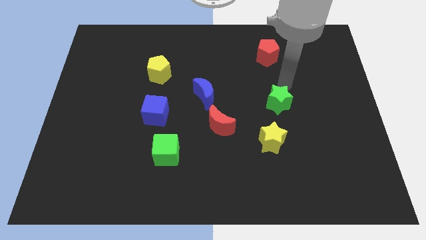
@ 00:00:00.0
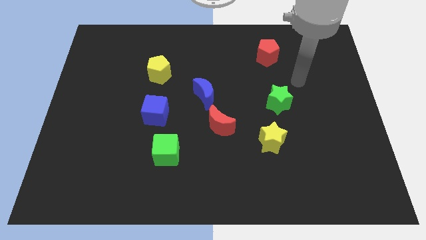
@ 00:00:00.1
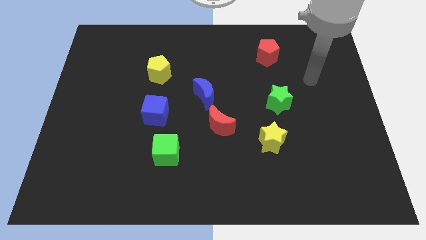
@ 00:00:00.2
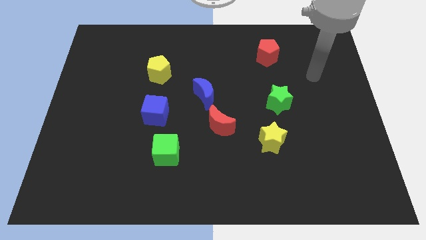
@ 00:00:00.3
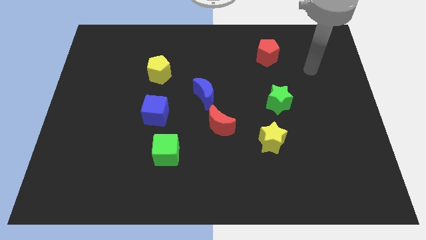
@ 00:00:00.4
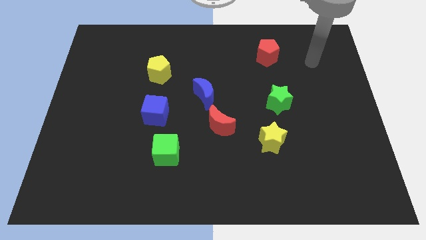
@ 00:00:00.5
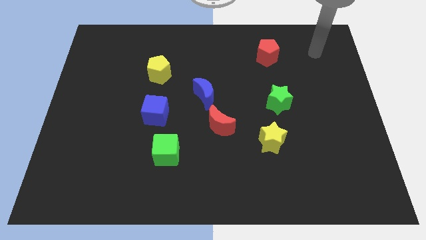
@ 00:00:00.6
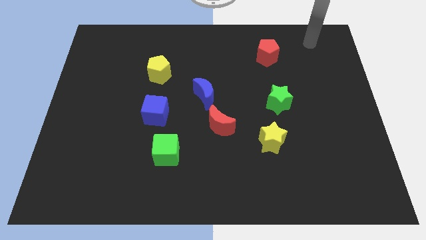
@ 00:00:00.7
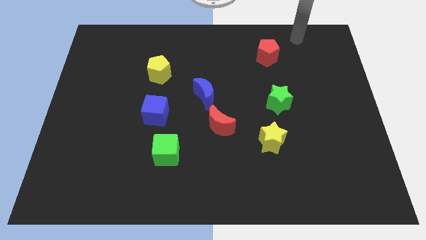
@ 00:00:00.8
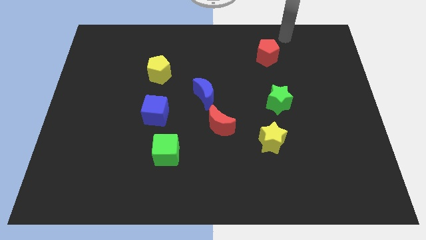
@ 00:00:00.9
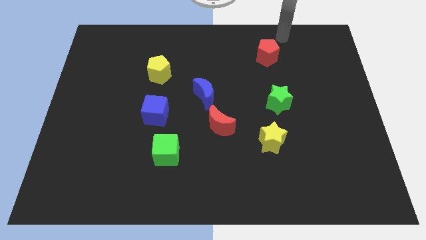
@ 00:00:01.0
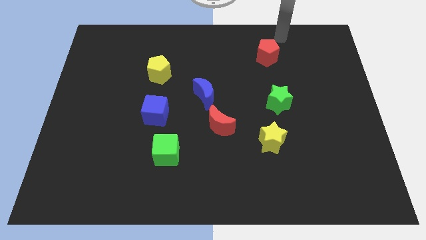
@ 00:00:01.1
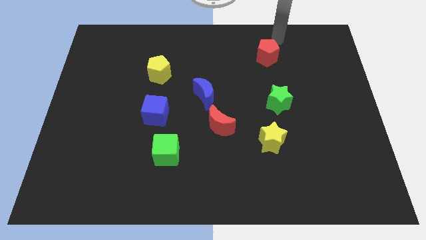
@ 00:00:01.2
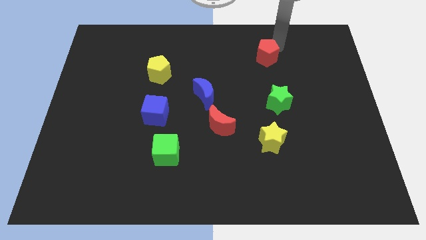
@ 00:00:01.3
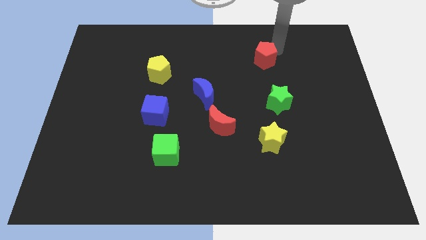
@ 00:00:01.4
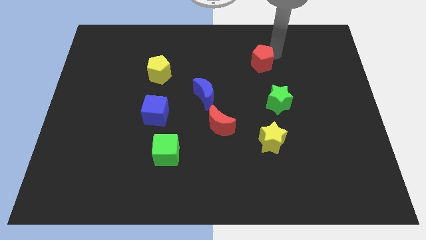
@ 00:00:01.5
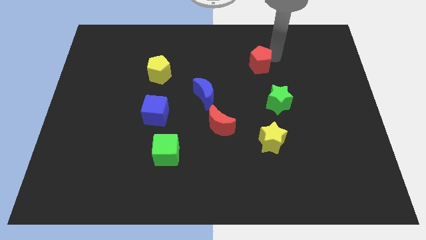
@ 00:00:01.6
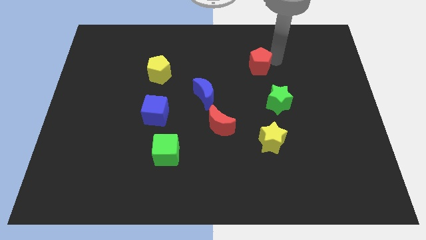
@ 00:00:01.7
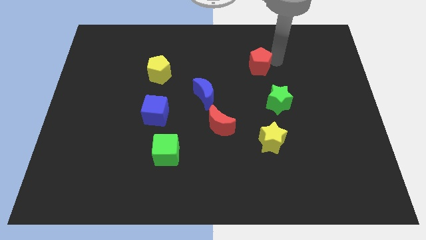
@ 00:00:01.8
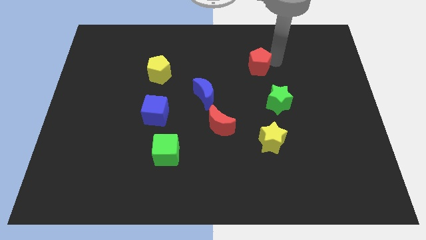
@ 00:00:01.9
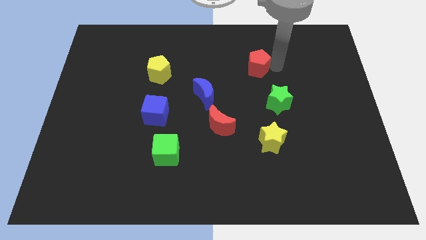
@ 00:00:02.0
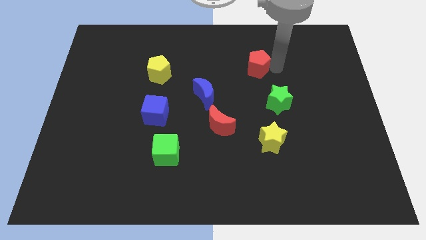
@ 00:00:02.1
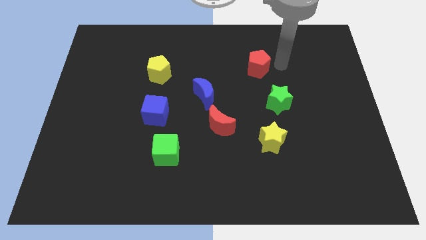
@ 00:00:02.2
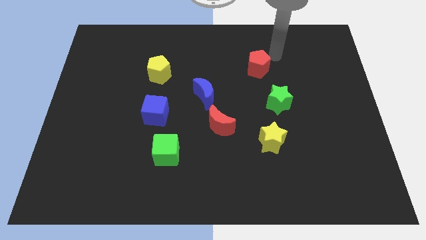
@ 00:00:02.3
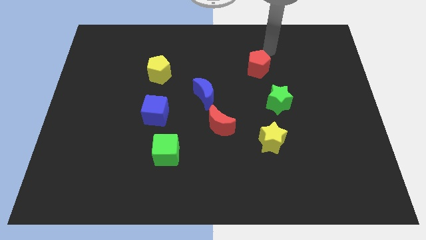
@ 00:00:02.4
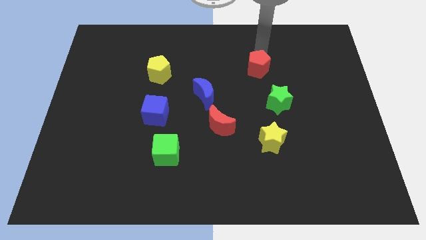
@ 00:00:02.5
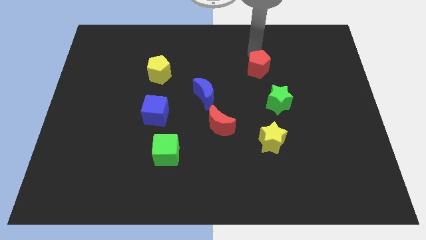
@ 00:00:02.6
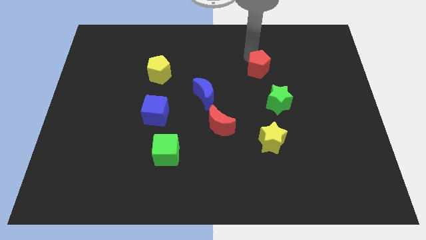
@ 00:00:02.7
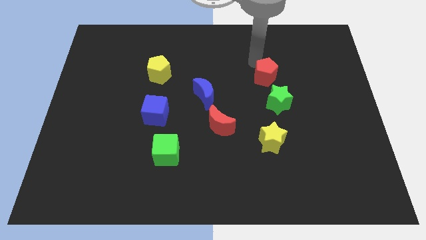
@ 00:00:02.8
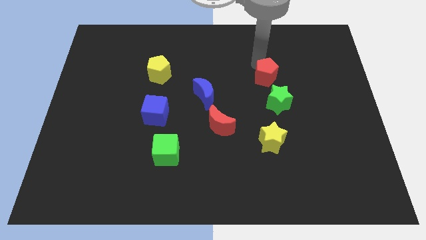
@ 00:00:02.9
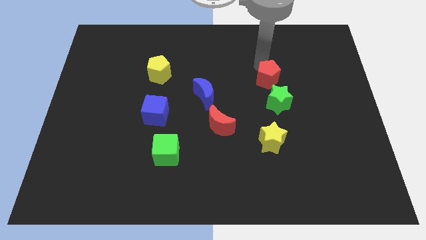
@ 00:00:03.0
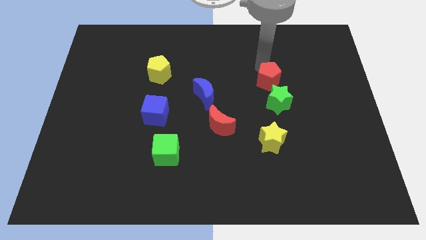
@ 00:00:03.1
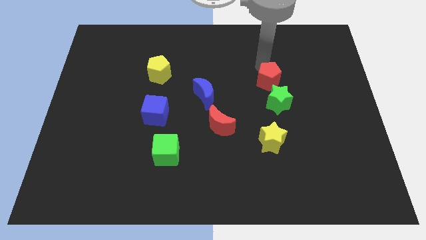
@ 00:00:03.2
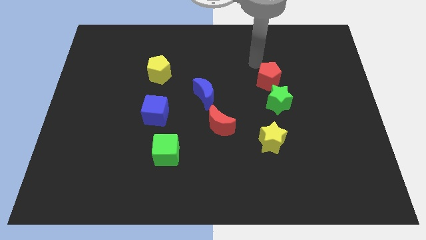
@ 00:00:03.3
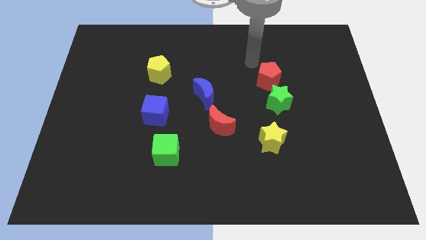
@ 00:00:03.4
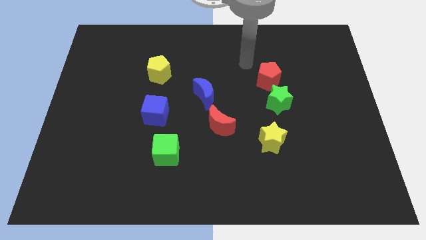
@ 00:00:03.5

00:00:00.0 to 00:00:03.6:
move the red pentagon closer to the green star

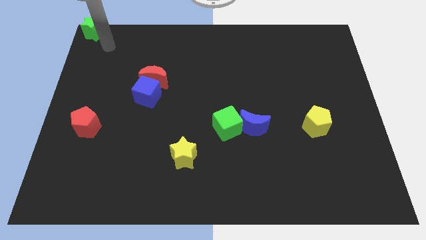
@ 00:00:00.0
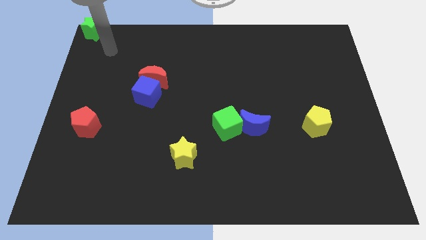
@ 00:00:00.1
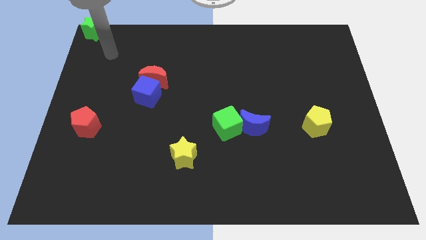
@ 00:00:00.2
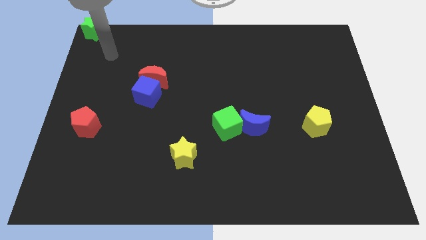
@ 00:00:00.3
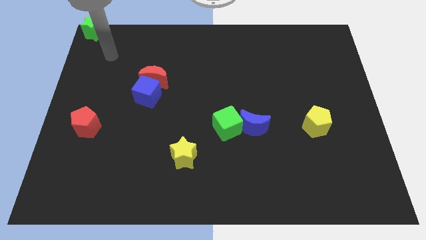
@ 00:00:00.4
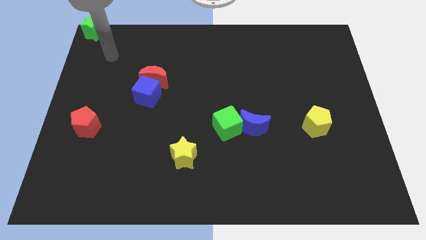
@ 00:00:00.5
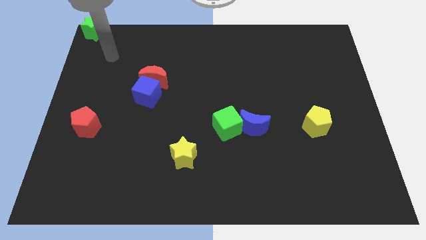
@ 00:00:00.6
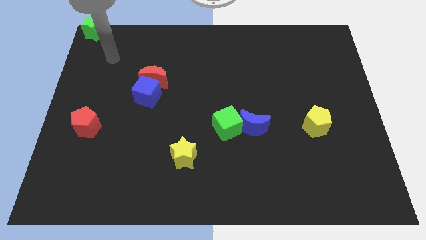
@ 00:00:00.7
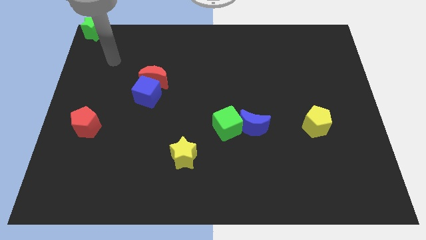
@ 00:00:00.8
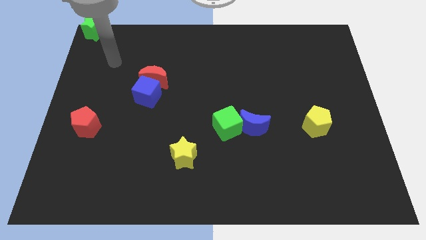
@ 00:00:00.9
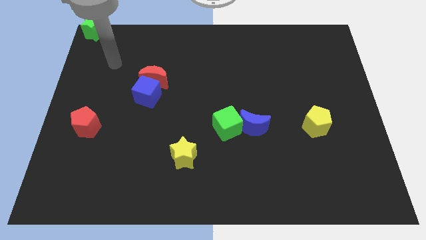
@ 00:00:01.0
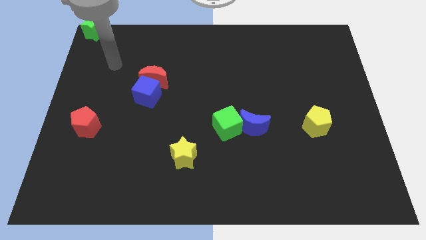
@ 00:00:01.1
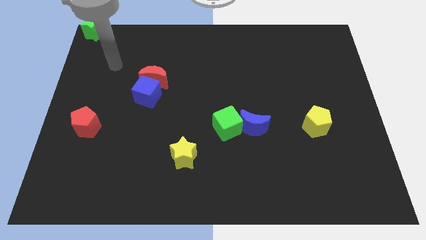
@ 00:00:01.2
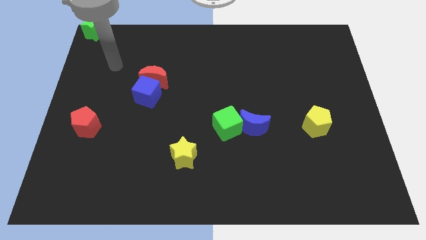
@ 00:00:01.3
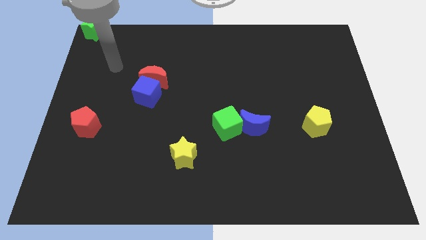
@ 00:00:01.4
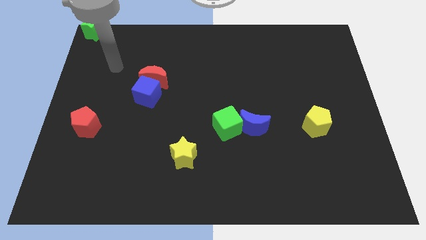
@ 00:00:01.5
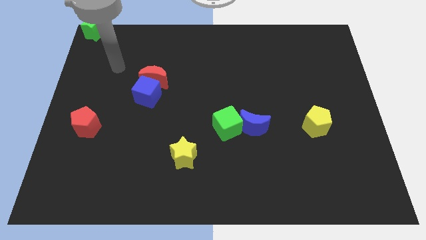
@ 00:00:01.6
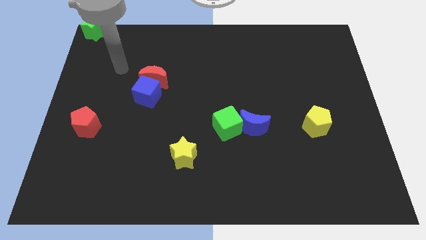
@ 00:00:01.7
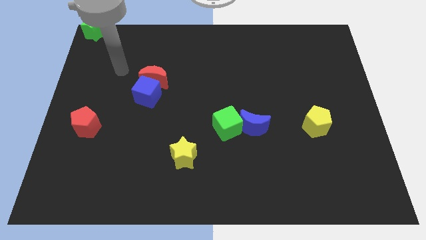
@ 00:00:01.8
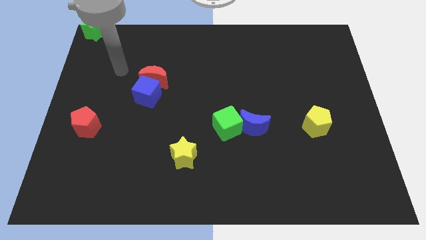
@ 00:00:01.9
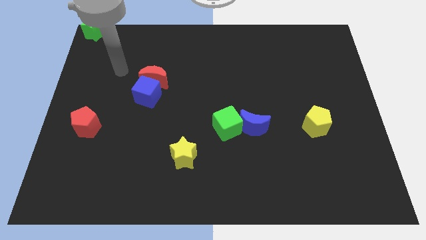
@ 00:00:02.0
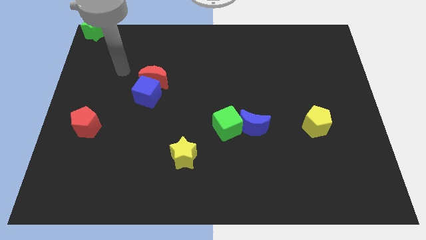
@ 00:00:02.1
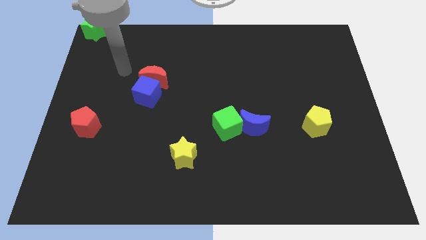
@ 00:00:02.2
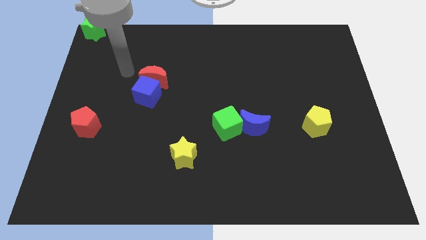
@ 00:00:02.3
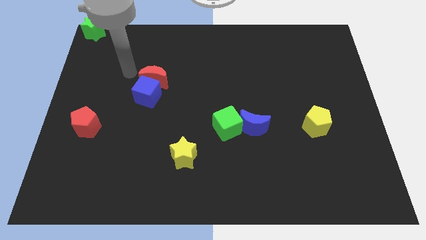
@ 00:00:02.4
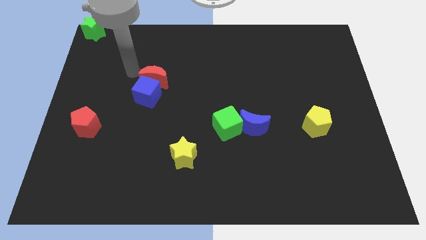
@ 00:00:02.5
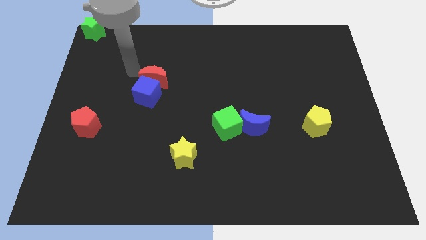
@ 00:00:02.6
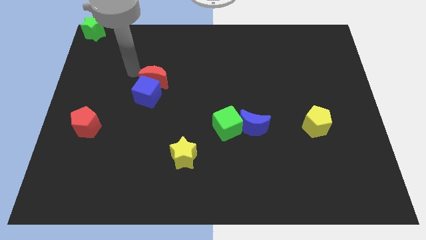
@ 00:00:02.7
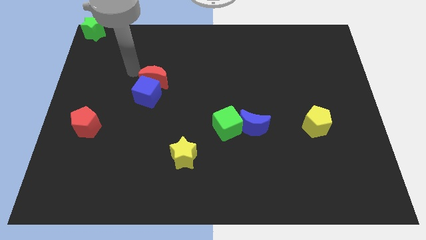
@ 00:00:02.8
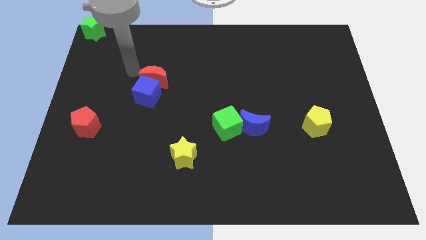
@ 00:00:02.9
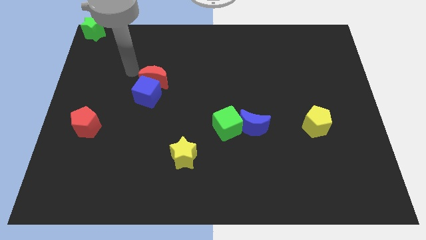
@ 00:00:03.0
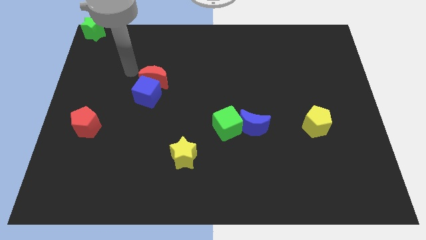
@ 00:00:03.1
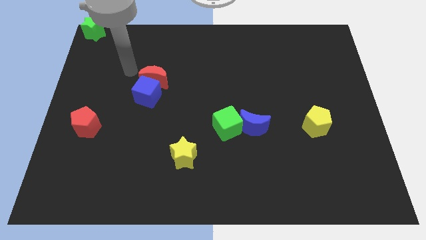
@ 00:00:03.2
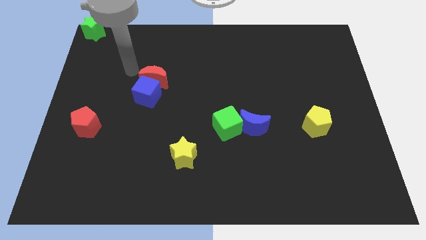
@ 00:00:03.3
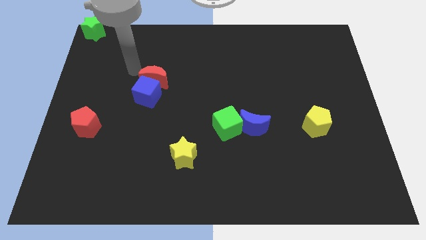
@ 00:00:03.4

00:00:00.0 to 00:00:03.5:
point your arm to the top left side of the red moon

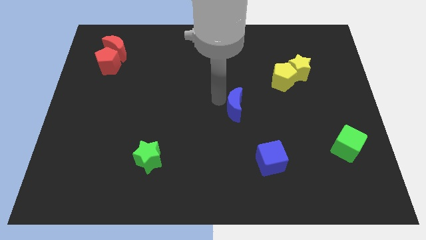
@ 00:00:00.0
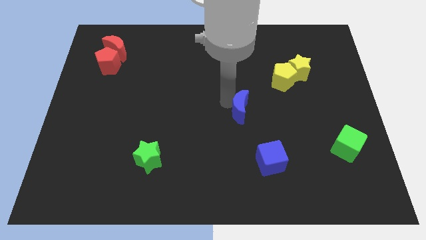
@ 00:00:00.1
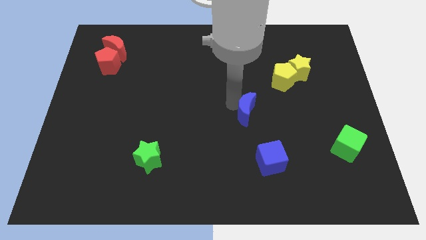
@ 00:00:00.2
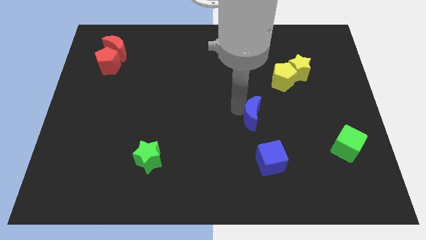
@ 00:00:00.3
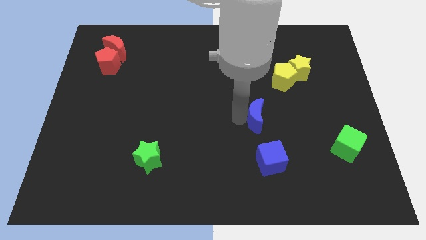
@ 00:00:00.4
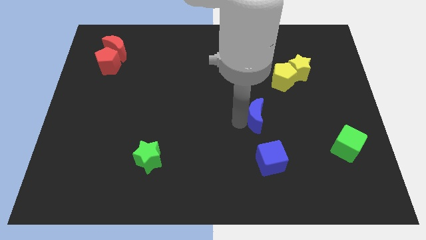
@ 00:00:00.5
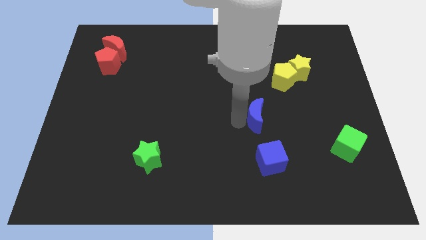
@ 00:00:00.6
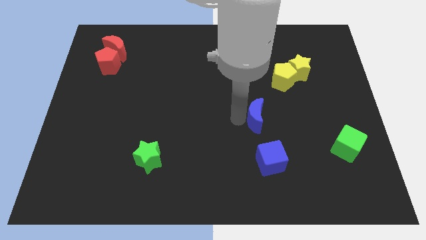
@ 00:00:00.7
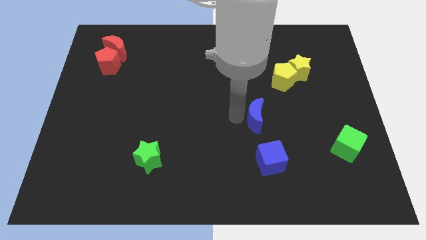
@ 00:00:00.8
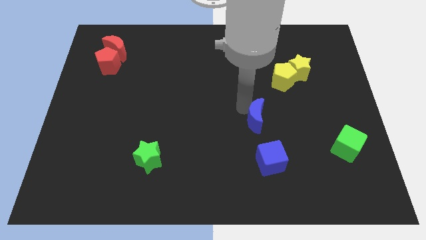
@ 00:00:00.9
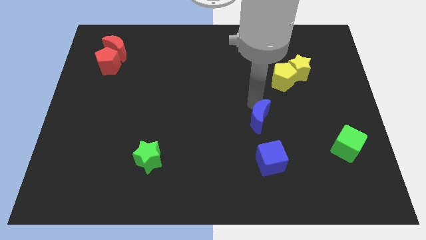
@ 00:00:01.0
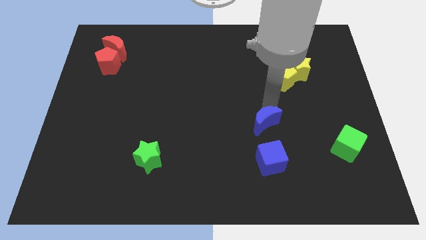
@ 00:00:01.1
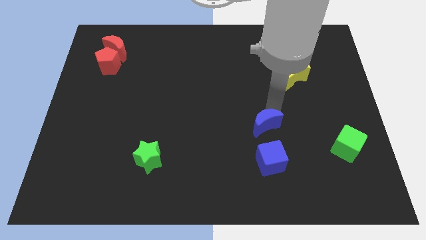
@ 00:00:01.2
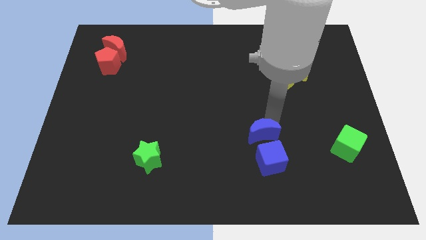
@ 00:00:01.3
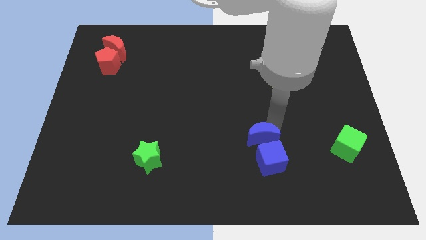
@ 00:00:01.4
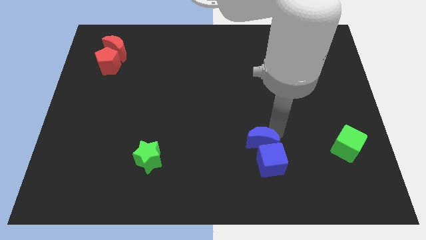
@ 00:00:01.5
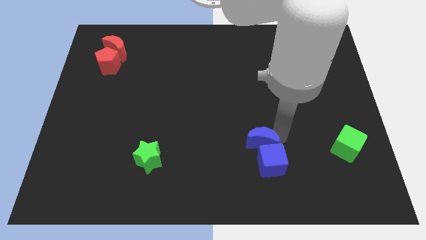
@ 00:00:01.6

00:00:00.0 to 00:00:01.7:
move the blue crescent above the blue cube
